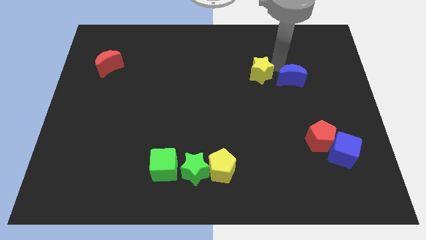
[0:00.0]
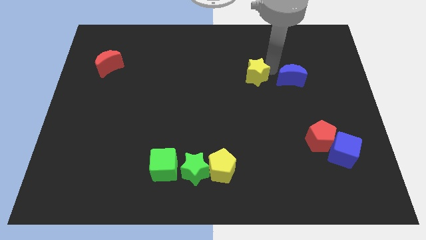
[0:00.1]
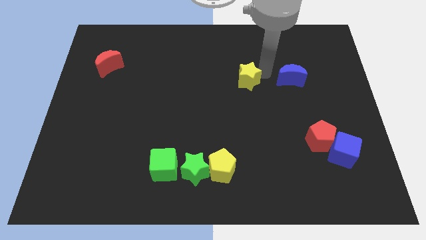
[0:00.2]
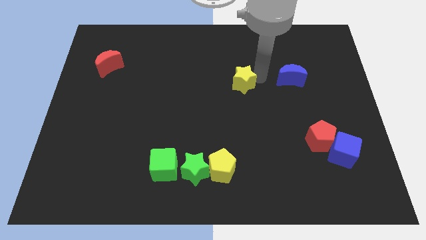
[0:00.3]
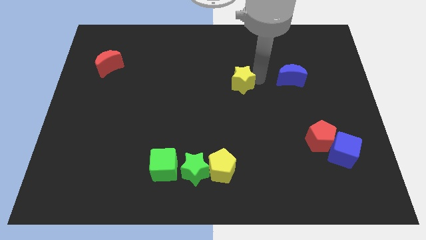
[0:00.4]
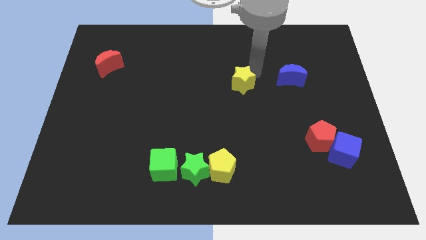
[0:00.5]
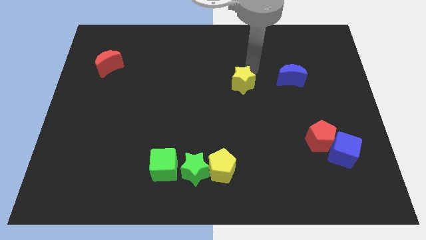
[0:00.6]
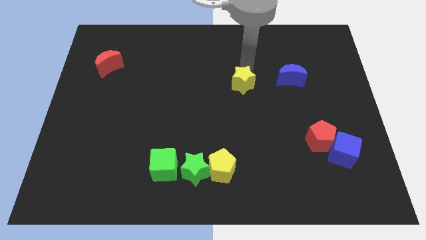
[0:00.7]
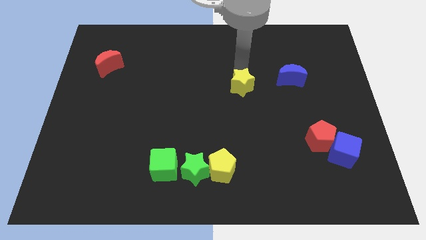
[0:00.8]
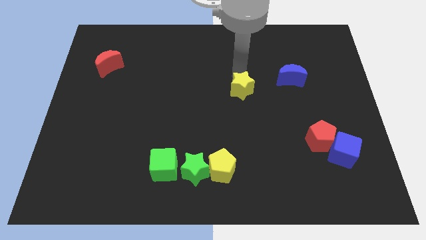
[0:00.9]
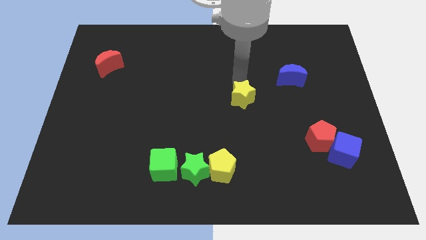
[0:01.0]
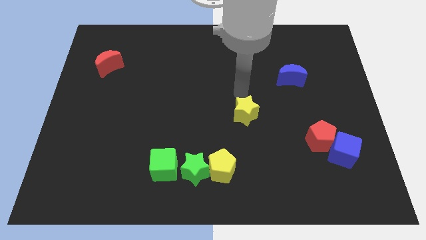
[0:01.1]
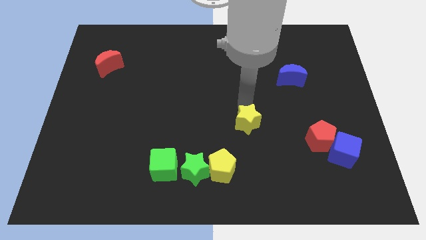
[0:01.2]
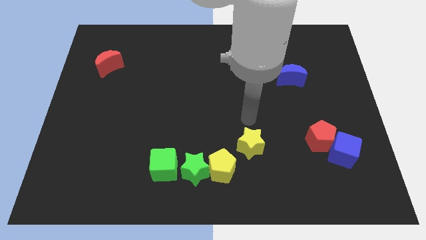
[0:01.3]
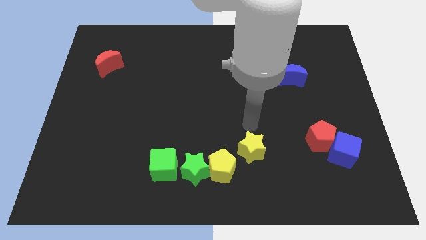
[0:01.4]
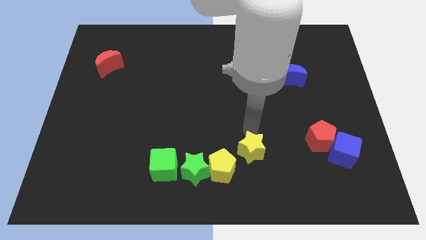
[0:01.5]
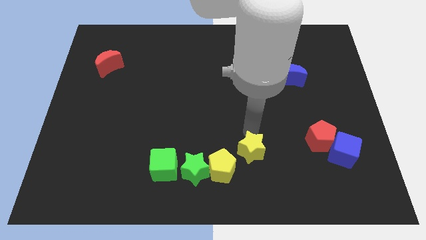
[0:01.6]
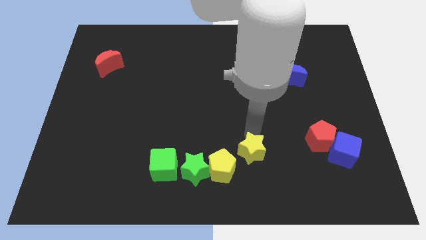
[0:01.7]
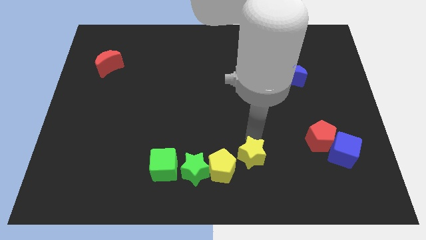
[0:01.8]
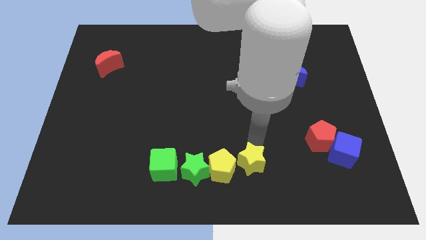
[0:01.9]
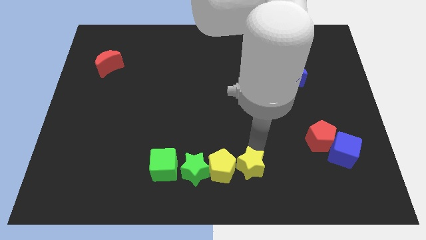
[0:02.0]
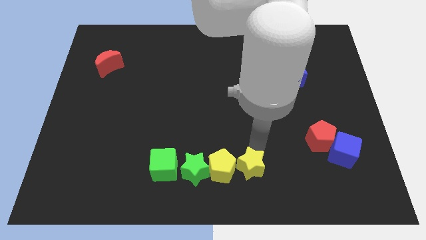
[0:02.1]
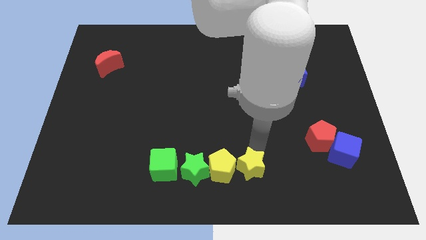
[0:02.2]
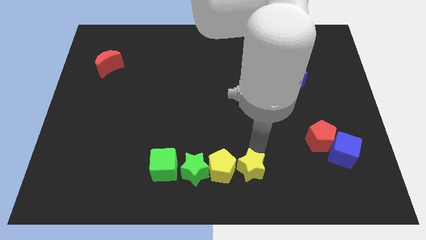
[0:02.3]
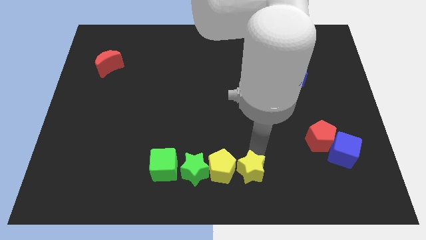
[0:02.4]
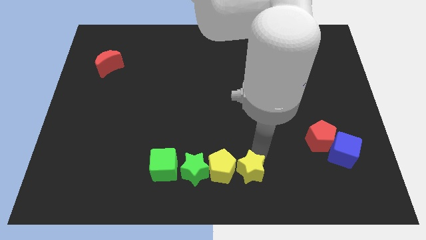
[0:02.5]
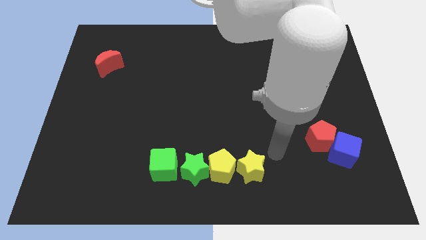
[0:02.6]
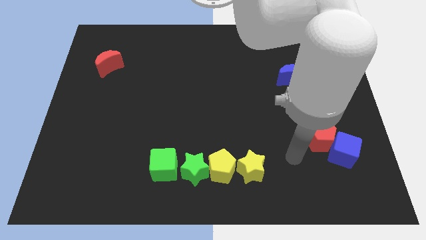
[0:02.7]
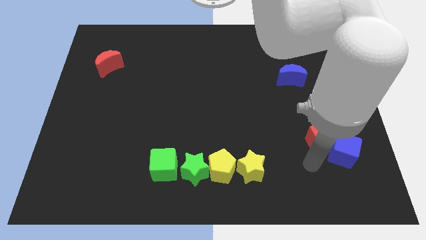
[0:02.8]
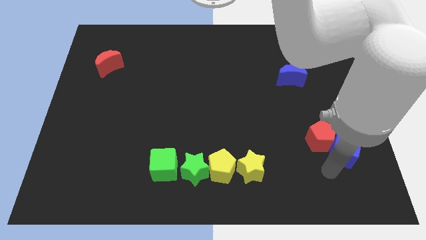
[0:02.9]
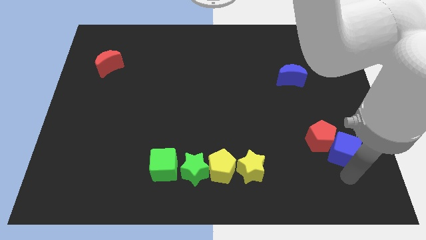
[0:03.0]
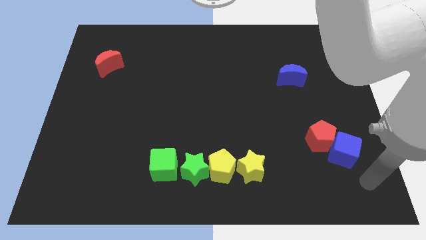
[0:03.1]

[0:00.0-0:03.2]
put the yellow star at the bottom center of the board

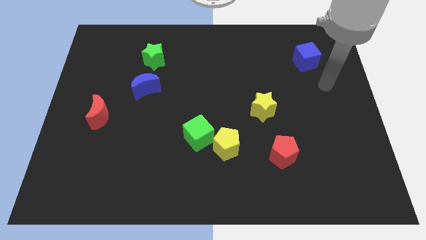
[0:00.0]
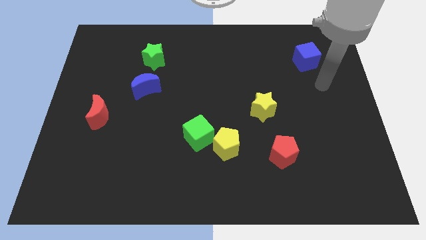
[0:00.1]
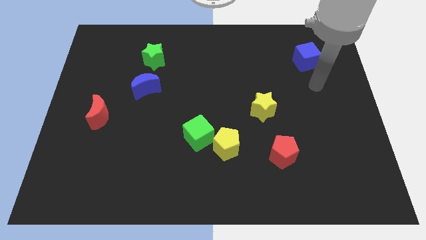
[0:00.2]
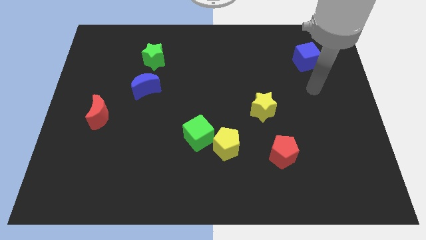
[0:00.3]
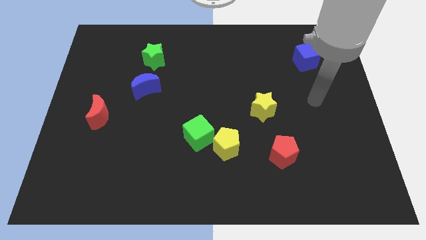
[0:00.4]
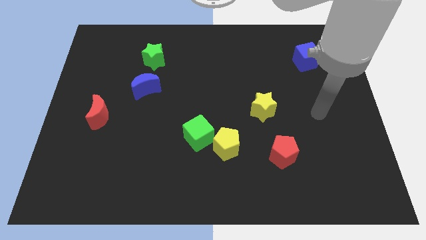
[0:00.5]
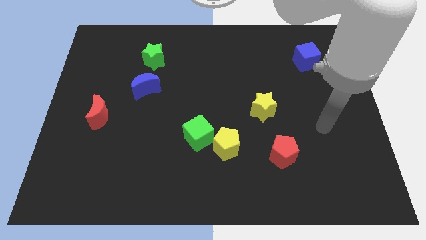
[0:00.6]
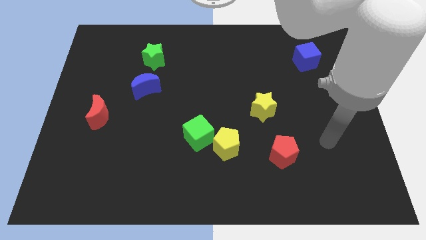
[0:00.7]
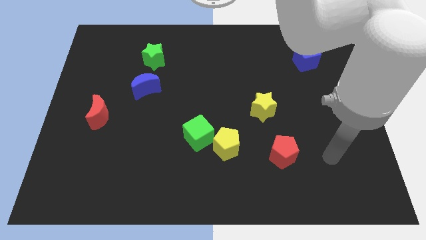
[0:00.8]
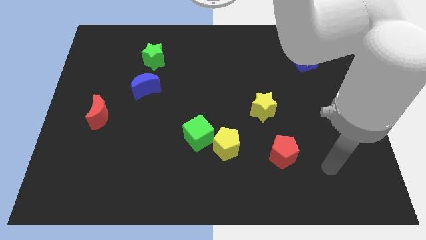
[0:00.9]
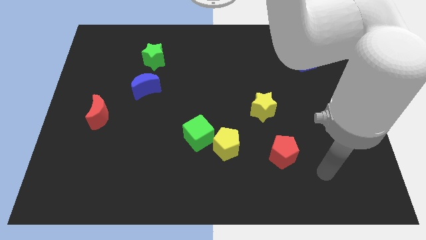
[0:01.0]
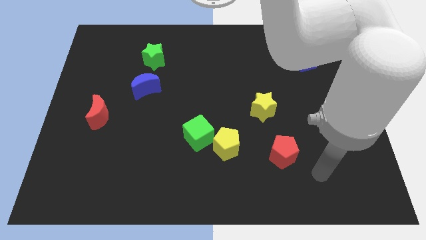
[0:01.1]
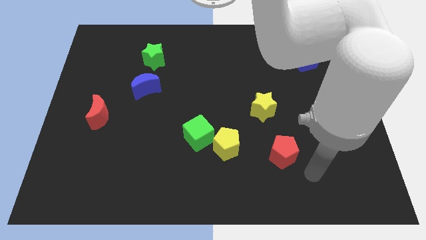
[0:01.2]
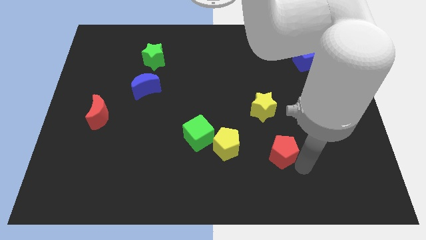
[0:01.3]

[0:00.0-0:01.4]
point the arm to the right of the red pentagon

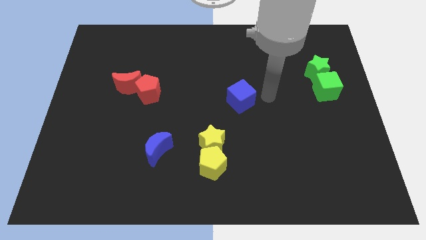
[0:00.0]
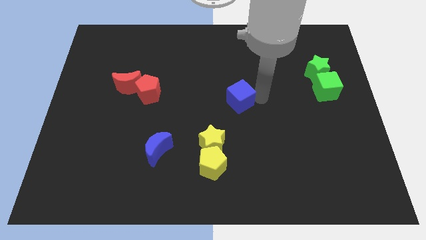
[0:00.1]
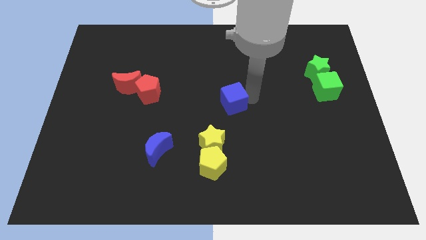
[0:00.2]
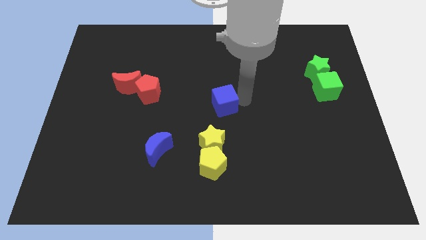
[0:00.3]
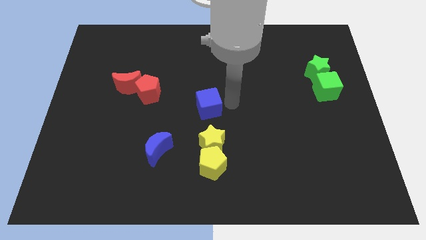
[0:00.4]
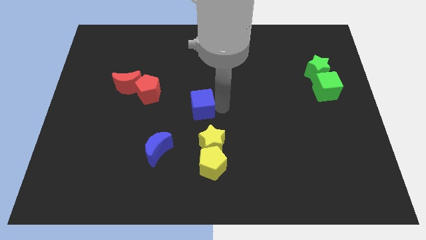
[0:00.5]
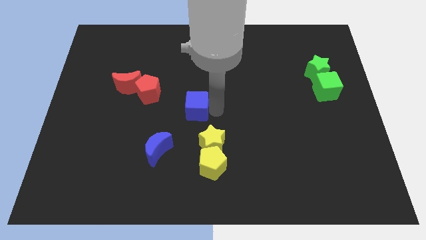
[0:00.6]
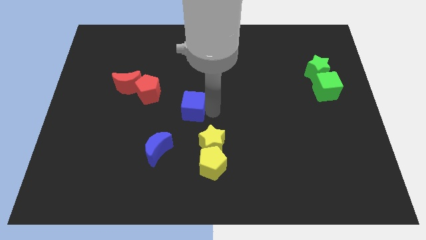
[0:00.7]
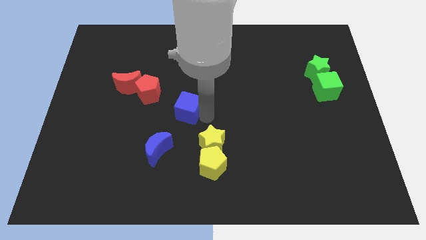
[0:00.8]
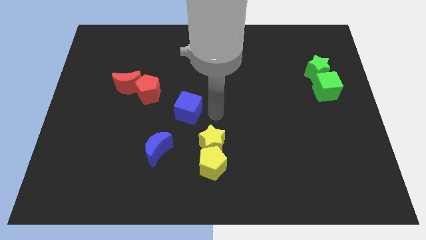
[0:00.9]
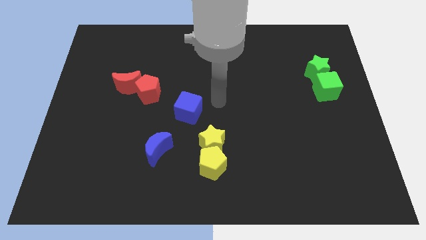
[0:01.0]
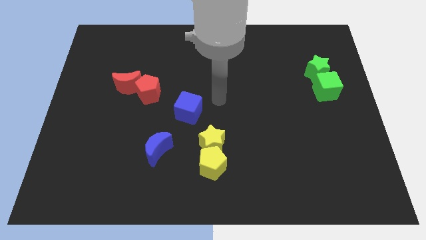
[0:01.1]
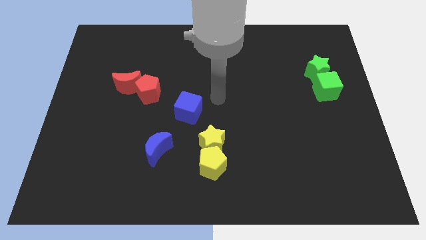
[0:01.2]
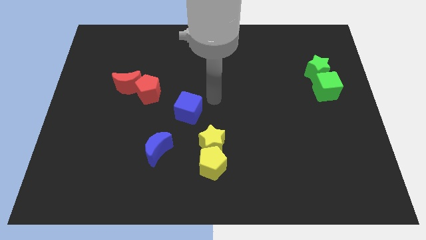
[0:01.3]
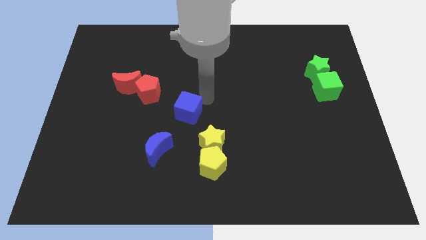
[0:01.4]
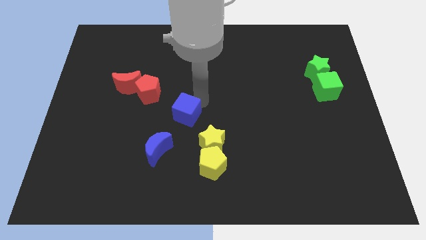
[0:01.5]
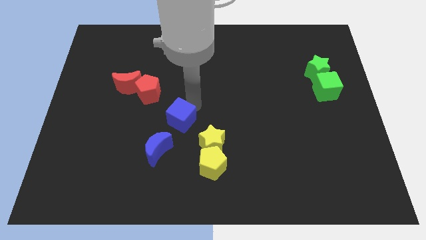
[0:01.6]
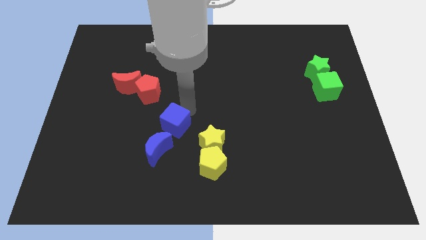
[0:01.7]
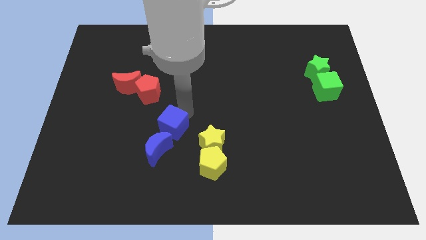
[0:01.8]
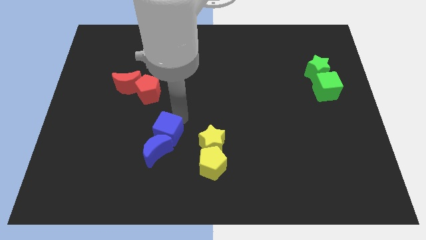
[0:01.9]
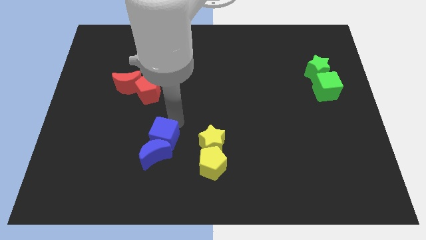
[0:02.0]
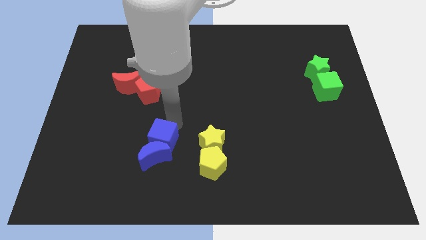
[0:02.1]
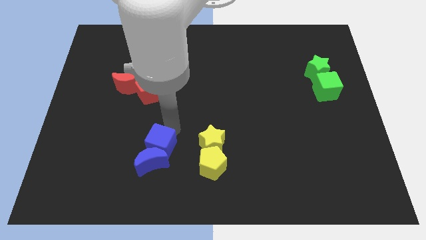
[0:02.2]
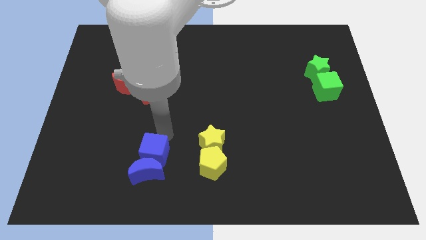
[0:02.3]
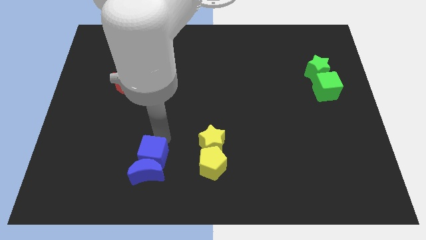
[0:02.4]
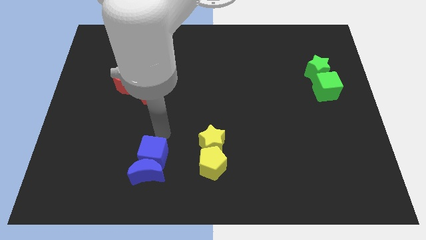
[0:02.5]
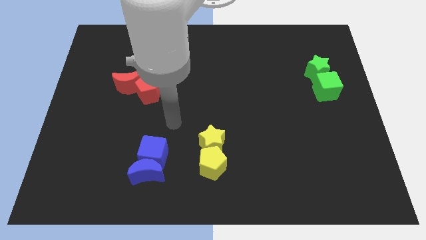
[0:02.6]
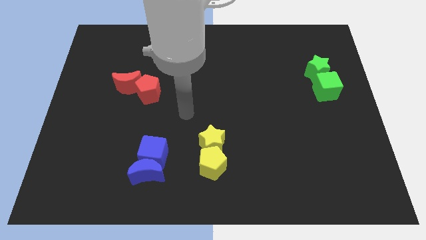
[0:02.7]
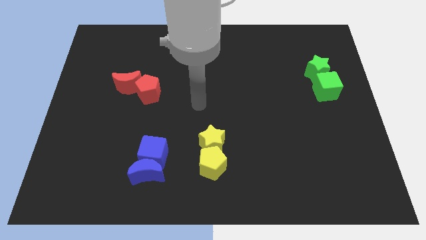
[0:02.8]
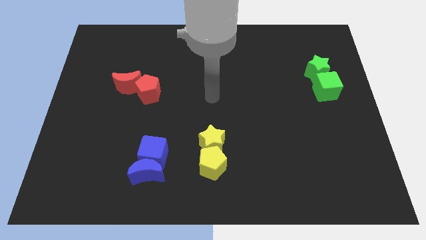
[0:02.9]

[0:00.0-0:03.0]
push the blue cube close to the blue moon

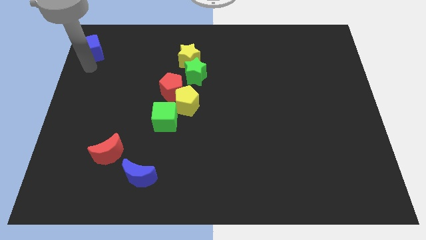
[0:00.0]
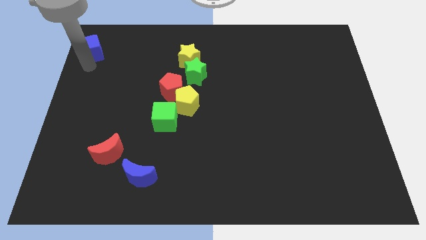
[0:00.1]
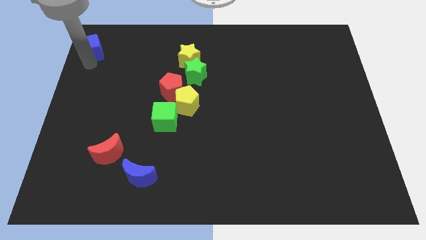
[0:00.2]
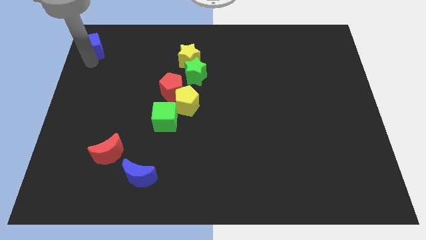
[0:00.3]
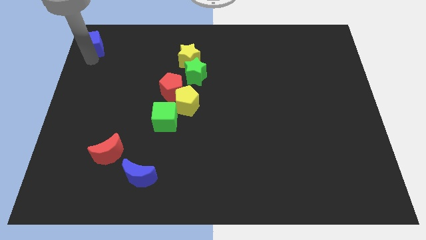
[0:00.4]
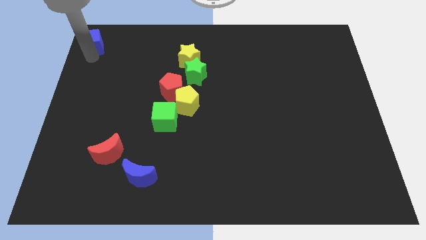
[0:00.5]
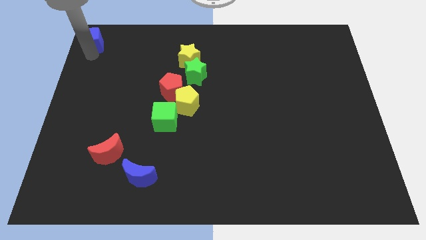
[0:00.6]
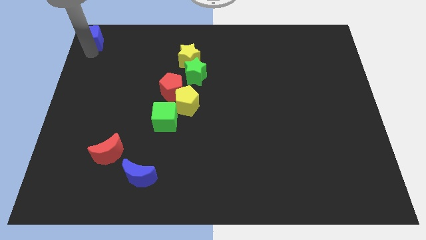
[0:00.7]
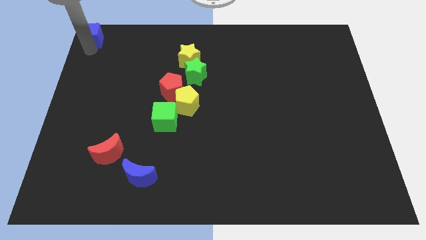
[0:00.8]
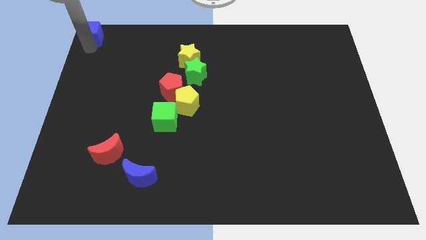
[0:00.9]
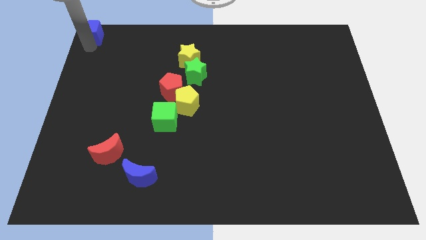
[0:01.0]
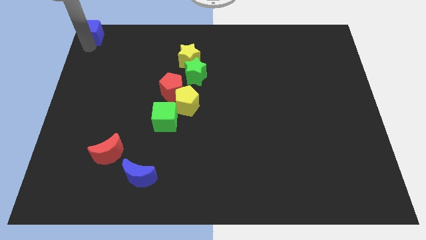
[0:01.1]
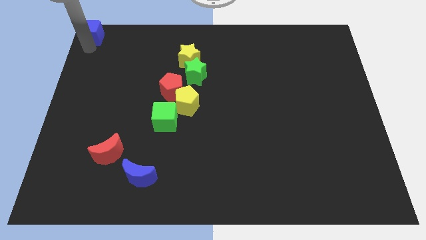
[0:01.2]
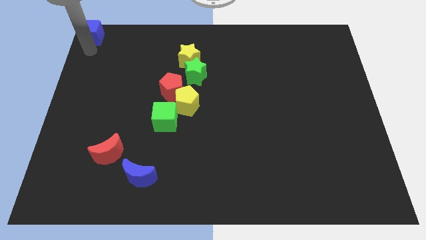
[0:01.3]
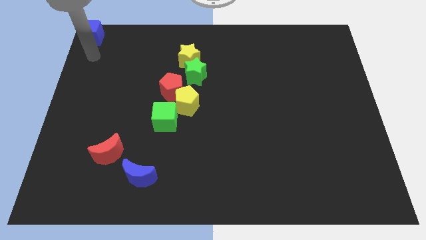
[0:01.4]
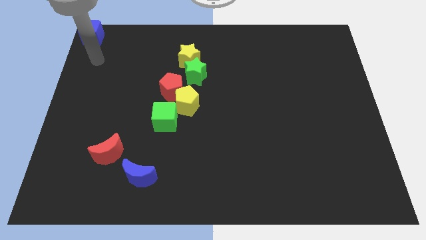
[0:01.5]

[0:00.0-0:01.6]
place a blue cube to the top corner of the board
